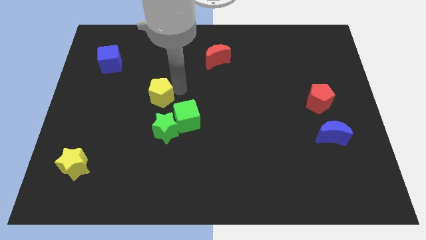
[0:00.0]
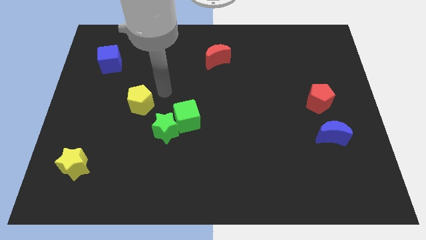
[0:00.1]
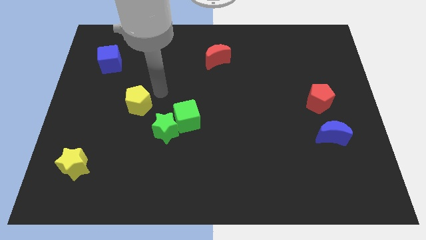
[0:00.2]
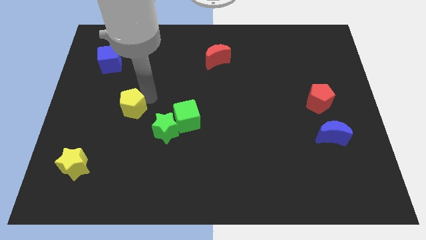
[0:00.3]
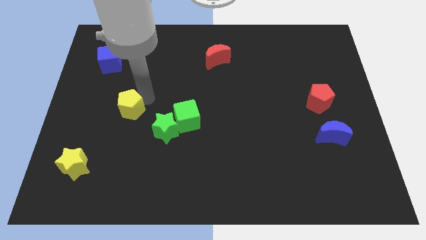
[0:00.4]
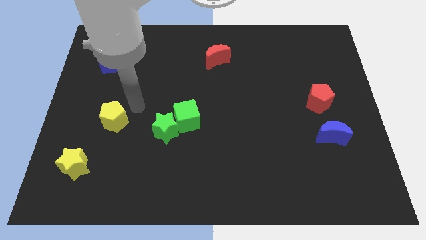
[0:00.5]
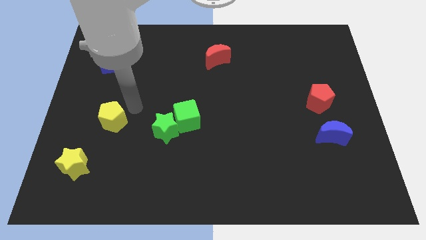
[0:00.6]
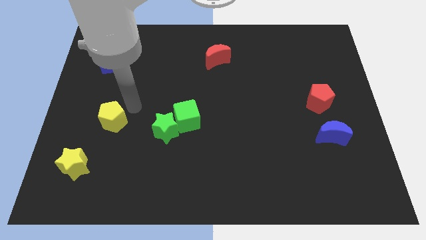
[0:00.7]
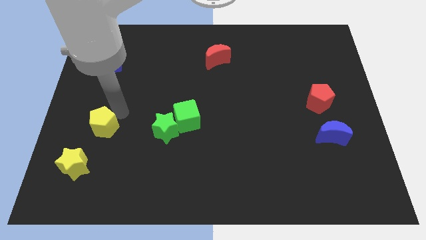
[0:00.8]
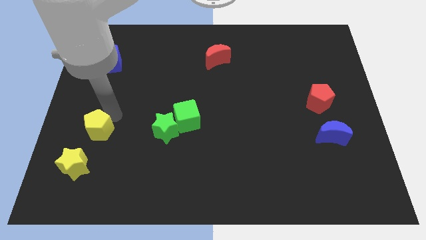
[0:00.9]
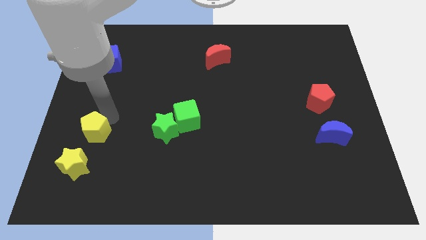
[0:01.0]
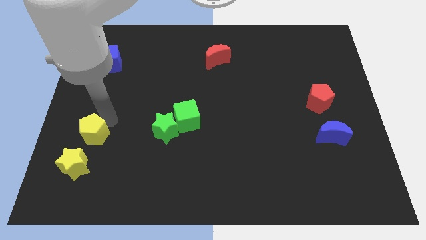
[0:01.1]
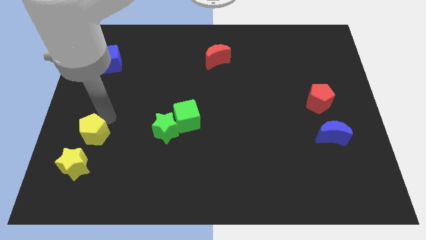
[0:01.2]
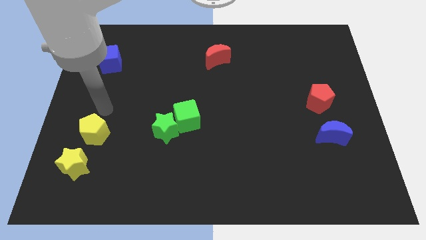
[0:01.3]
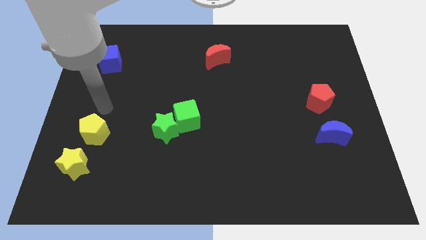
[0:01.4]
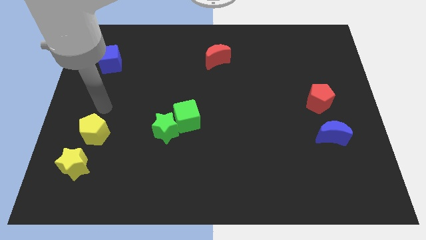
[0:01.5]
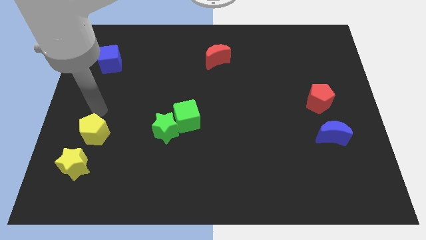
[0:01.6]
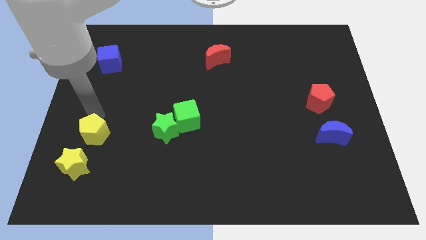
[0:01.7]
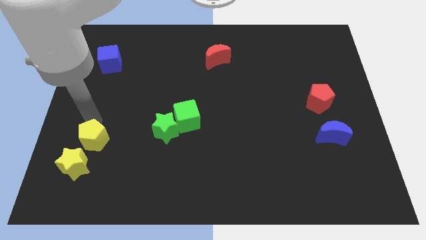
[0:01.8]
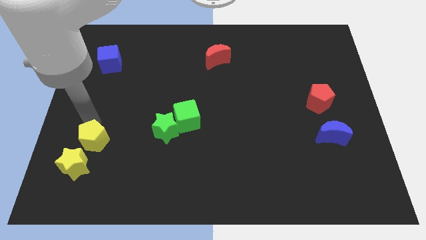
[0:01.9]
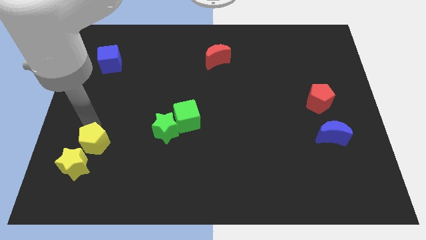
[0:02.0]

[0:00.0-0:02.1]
add yellow pentagon into yellow star

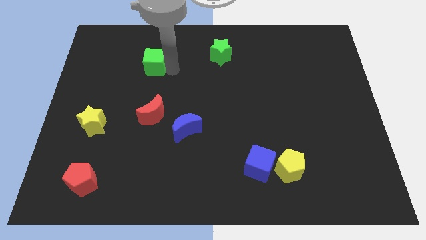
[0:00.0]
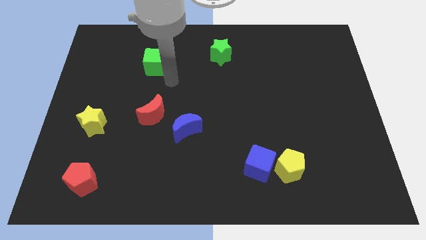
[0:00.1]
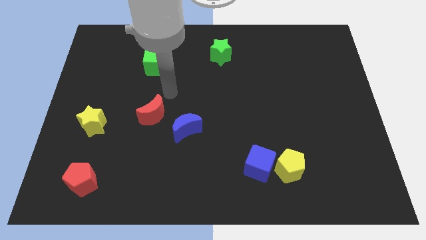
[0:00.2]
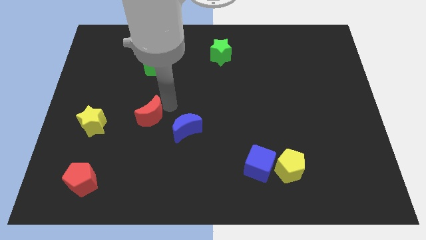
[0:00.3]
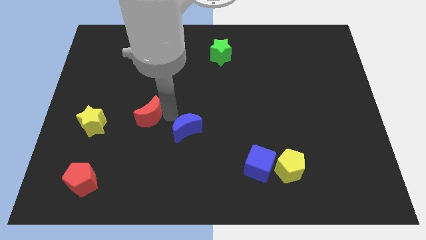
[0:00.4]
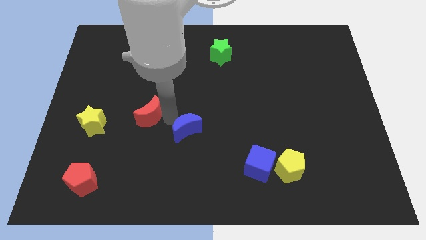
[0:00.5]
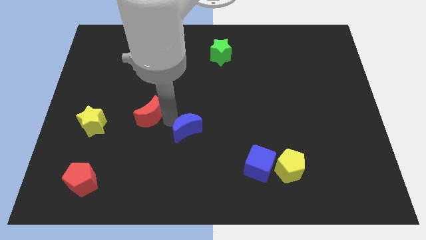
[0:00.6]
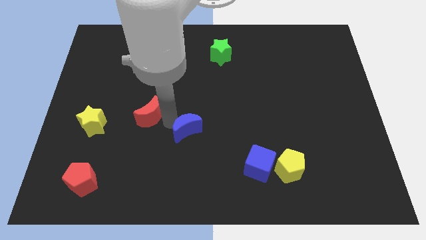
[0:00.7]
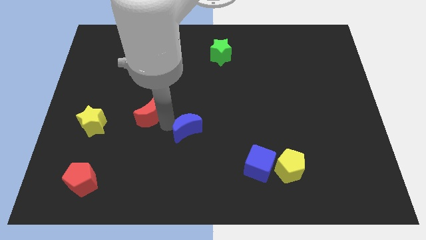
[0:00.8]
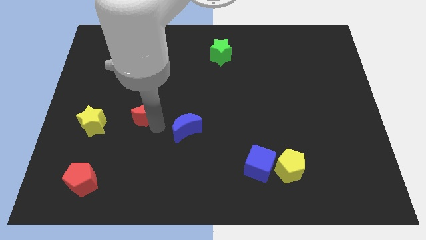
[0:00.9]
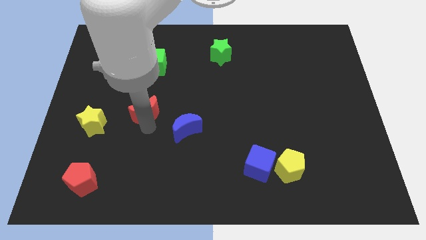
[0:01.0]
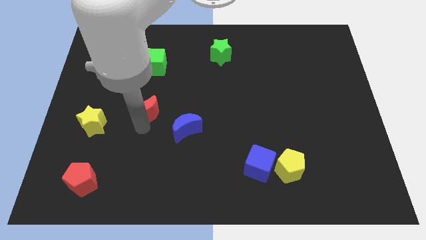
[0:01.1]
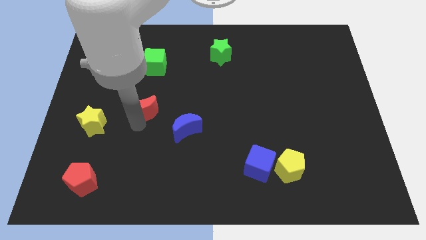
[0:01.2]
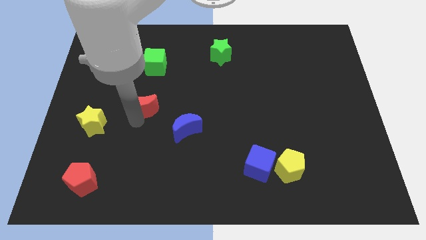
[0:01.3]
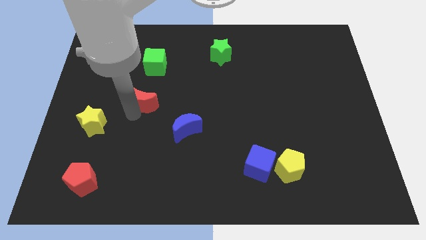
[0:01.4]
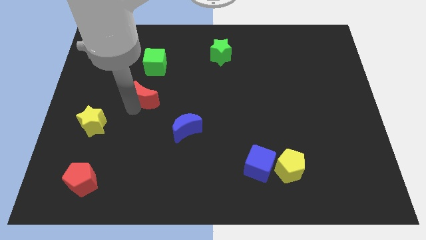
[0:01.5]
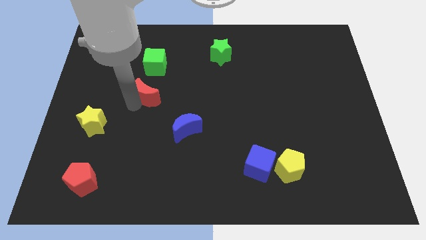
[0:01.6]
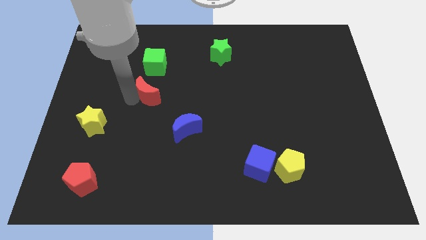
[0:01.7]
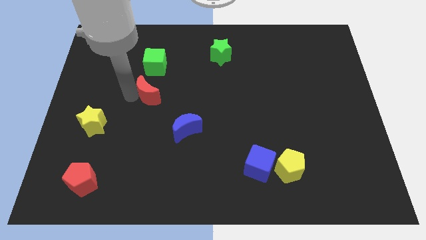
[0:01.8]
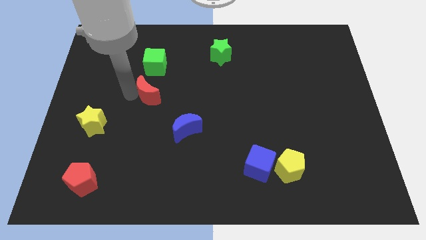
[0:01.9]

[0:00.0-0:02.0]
push the red crescent towards the green cube

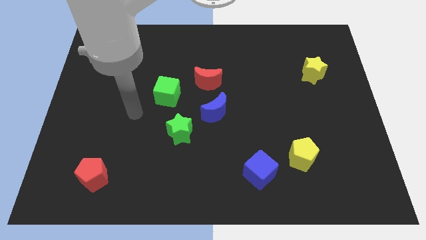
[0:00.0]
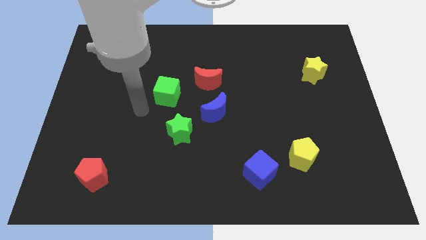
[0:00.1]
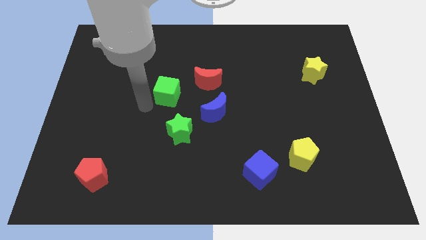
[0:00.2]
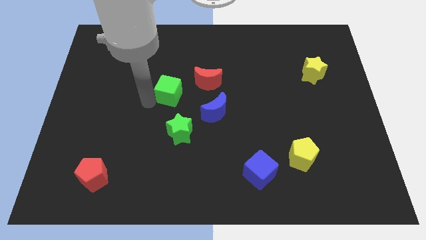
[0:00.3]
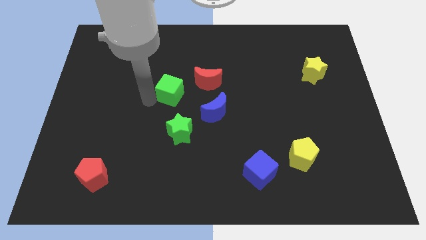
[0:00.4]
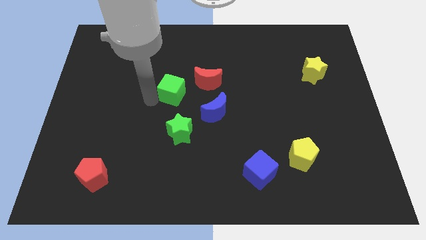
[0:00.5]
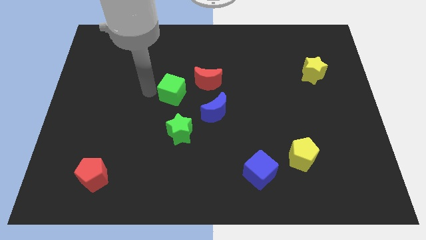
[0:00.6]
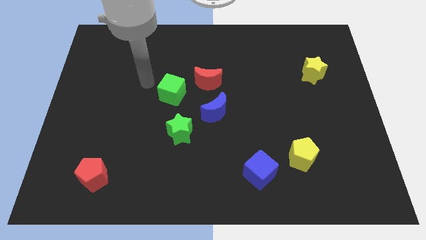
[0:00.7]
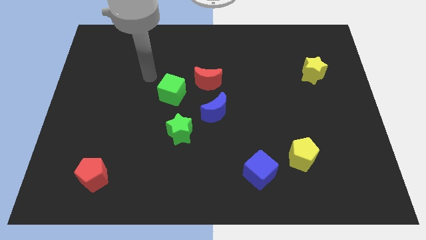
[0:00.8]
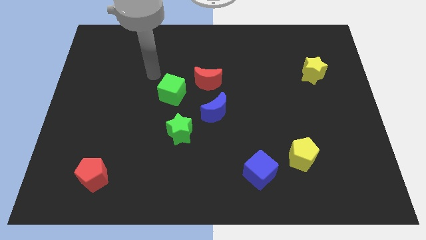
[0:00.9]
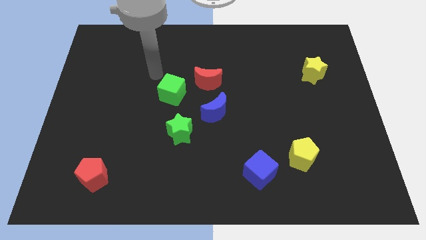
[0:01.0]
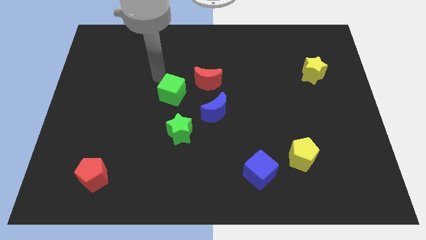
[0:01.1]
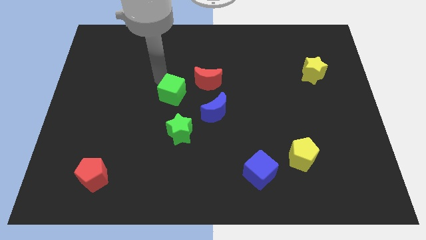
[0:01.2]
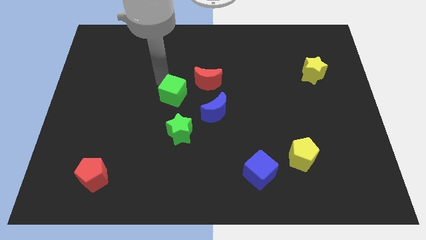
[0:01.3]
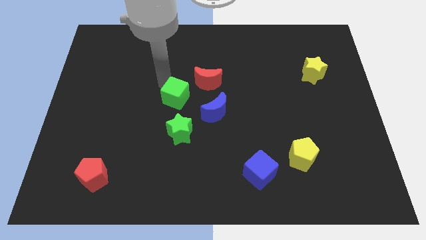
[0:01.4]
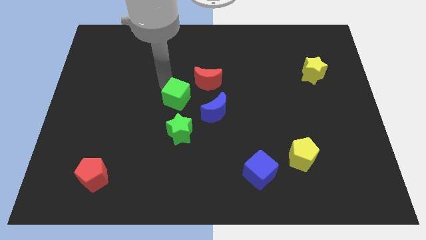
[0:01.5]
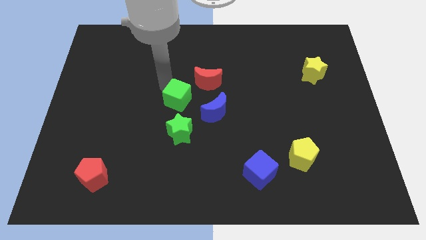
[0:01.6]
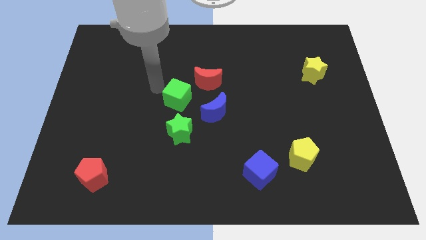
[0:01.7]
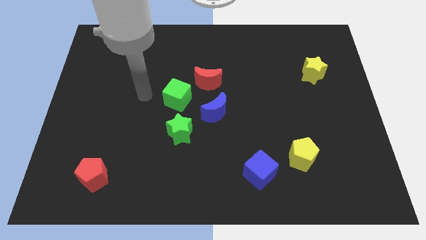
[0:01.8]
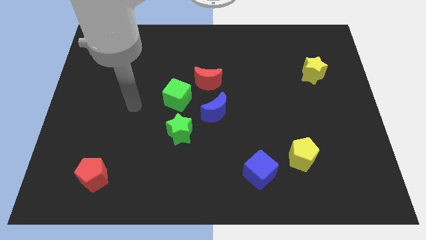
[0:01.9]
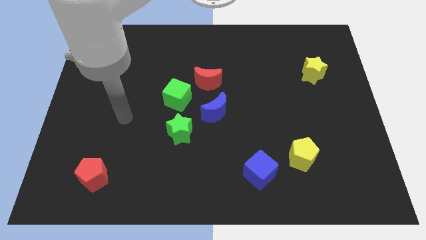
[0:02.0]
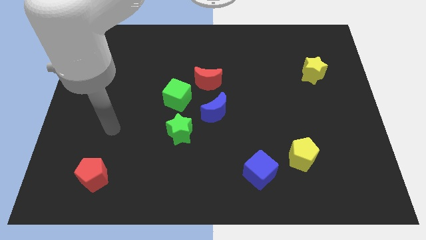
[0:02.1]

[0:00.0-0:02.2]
place green cube to the top left of blue moon

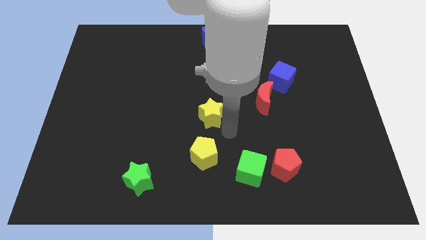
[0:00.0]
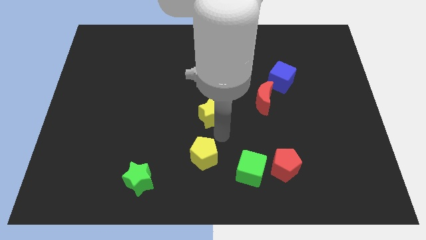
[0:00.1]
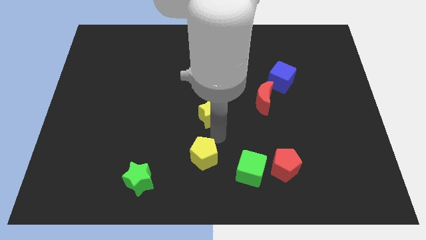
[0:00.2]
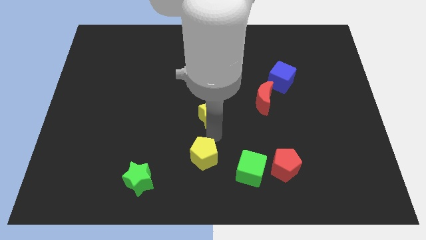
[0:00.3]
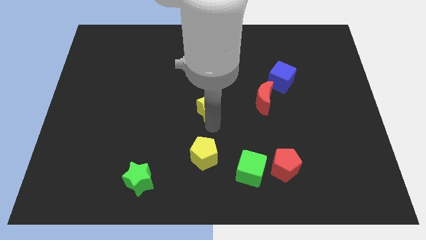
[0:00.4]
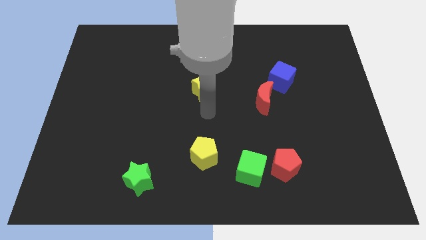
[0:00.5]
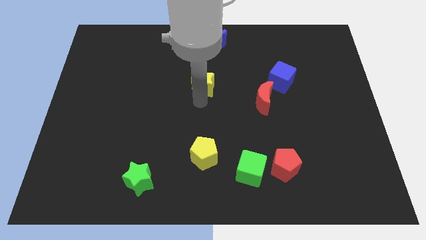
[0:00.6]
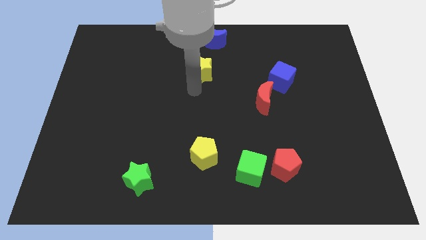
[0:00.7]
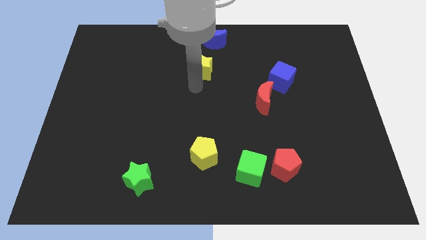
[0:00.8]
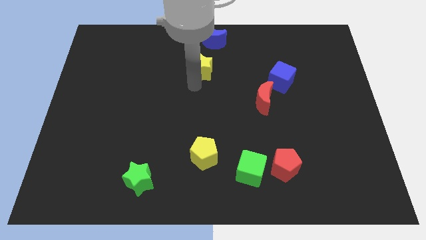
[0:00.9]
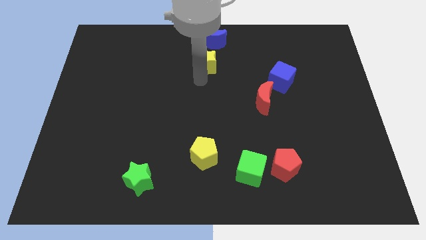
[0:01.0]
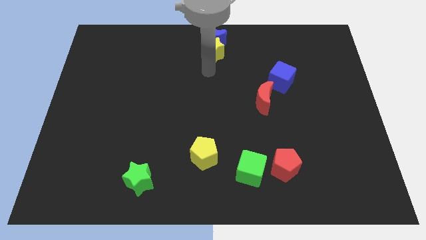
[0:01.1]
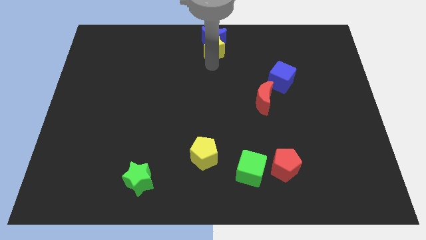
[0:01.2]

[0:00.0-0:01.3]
place yellow star below the blue moon

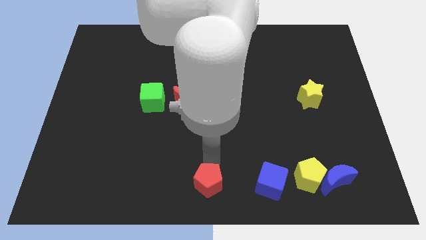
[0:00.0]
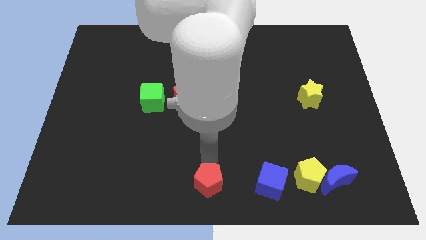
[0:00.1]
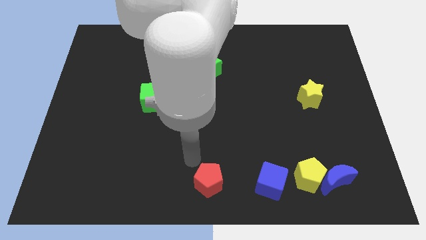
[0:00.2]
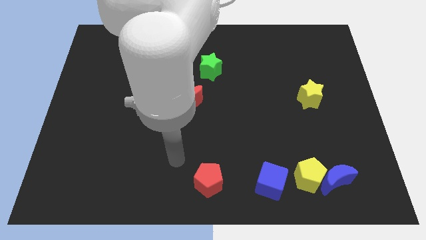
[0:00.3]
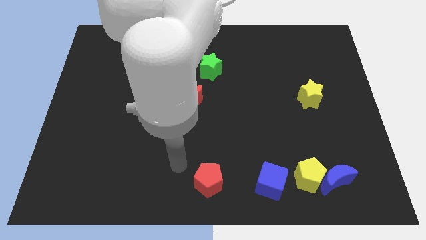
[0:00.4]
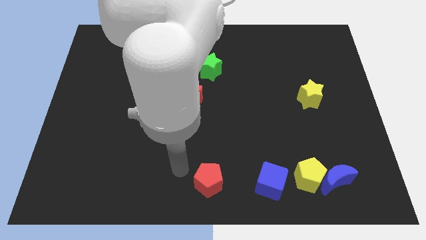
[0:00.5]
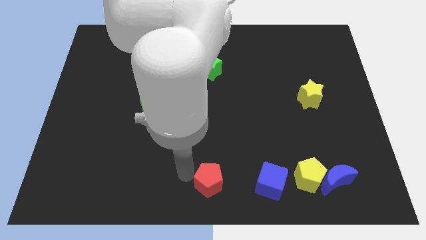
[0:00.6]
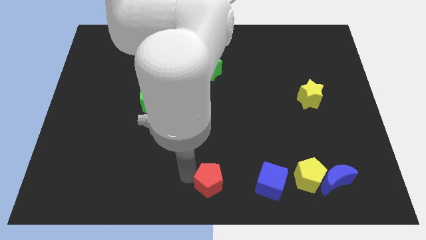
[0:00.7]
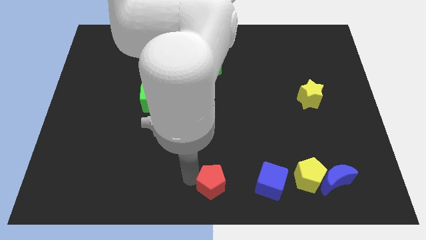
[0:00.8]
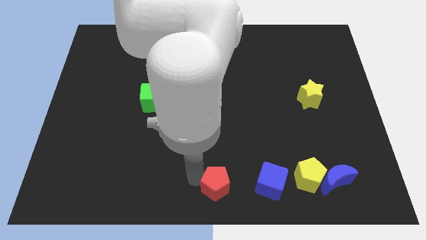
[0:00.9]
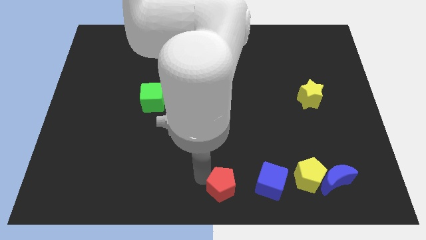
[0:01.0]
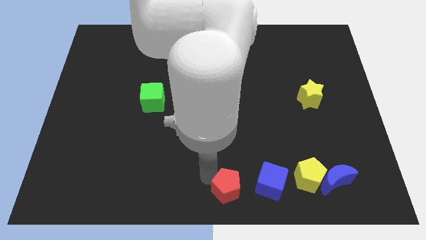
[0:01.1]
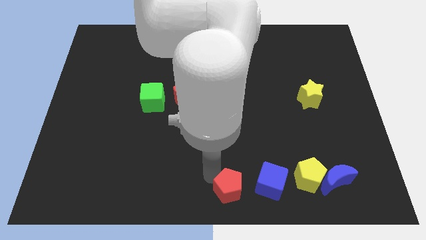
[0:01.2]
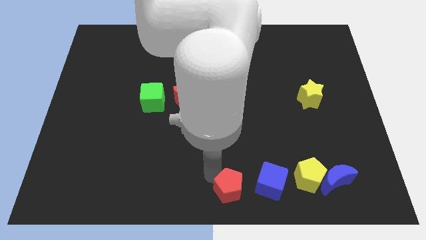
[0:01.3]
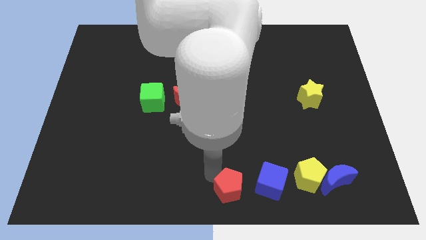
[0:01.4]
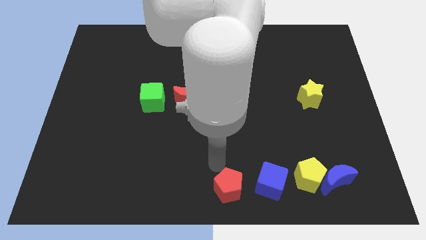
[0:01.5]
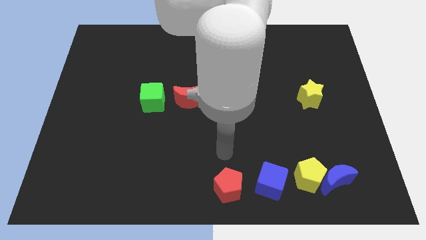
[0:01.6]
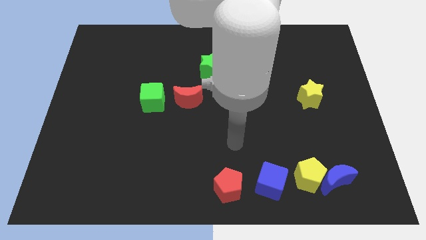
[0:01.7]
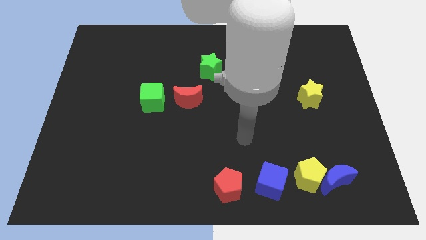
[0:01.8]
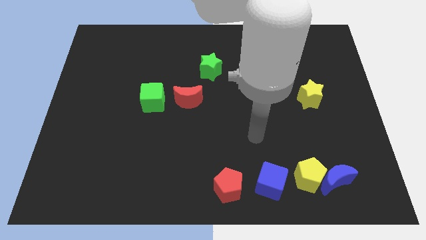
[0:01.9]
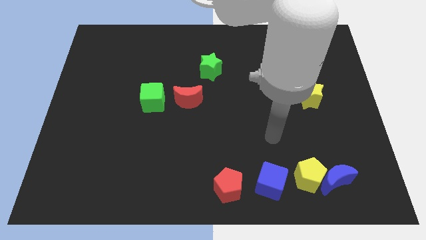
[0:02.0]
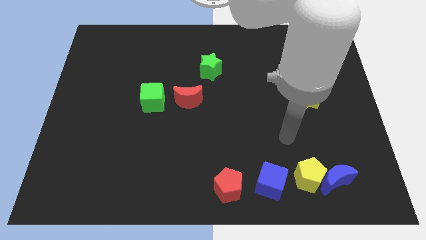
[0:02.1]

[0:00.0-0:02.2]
move the red pentagon to the left of blue cube
